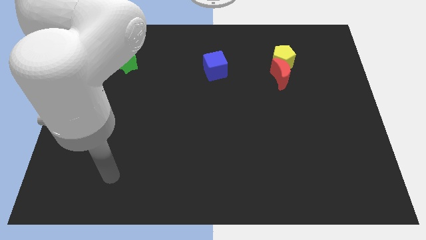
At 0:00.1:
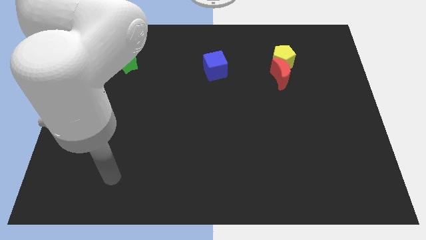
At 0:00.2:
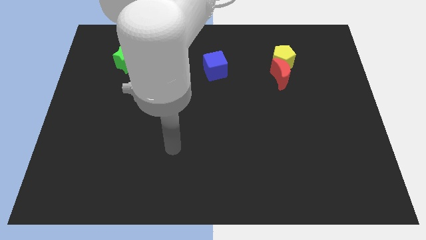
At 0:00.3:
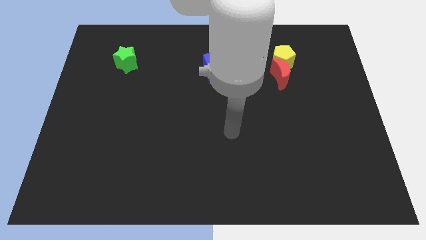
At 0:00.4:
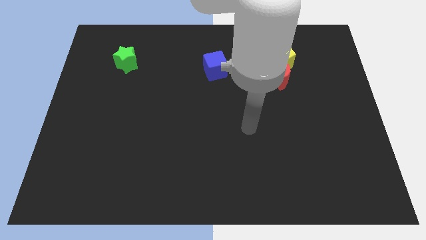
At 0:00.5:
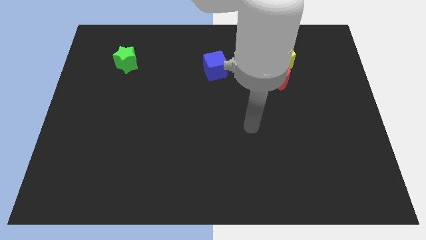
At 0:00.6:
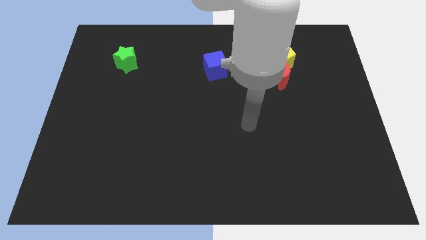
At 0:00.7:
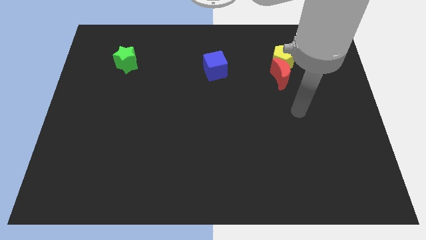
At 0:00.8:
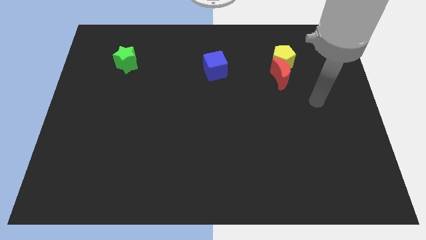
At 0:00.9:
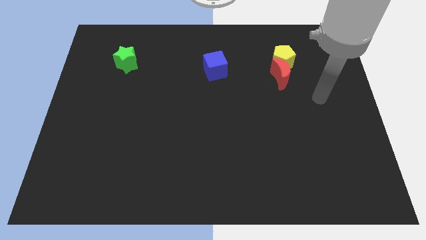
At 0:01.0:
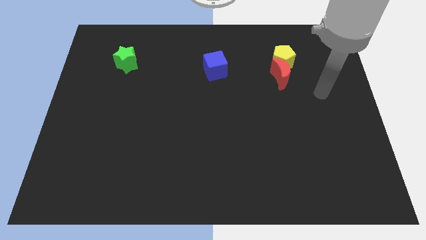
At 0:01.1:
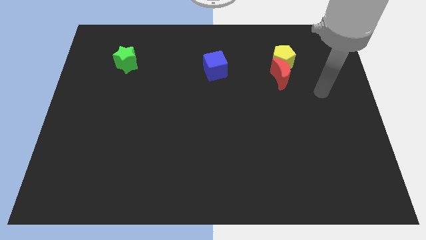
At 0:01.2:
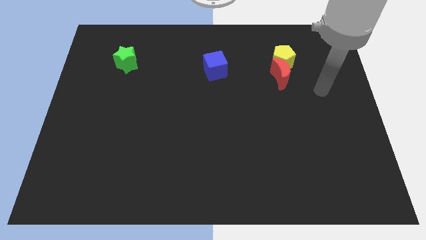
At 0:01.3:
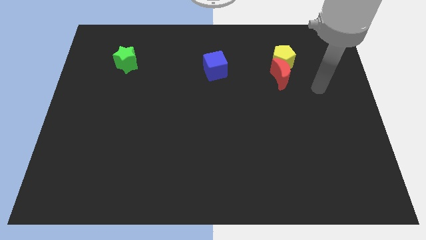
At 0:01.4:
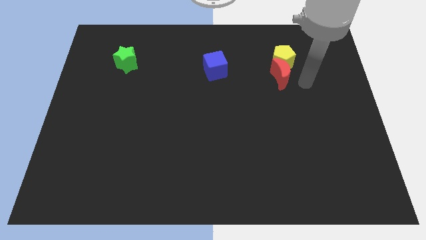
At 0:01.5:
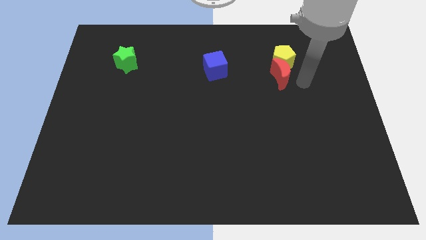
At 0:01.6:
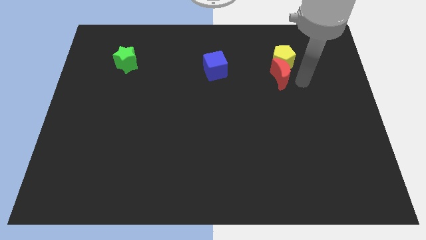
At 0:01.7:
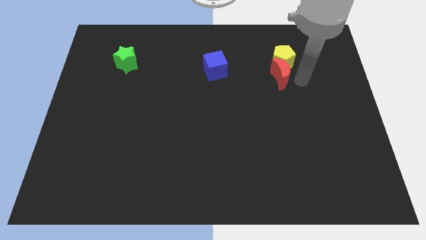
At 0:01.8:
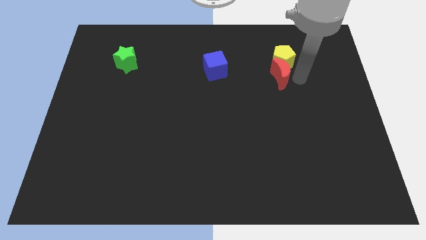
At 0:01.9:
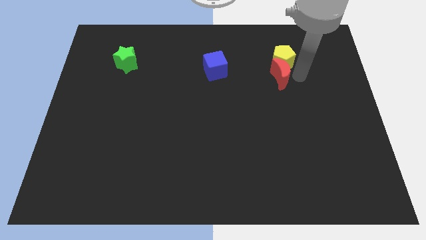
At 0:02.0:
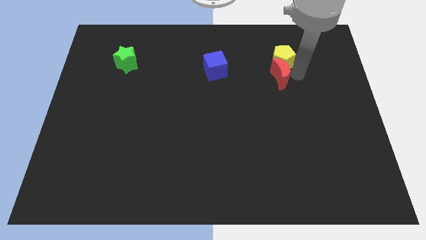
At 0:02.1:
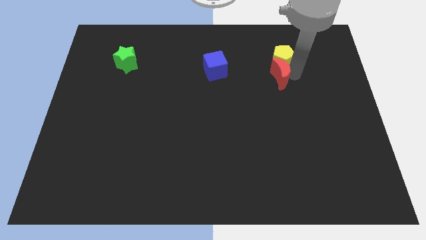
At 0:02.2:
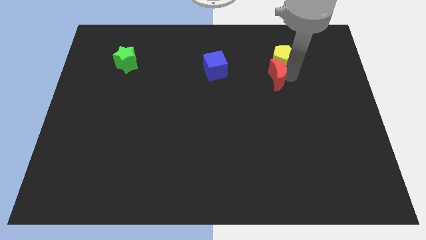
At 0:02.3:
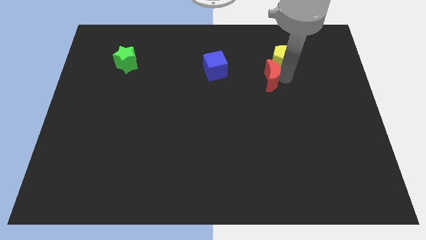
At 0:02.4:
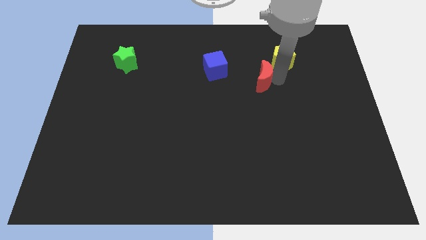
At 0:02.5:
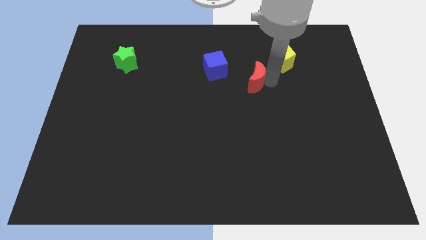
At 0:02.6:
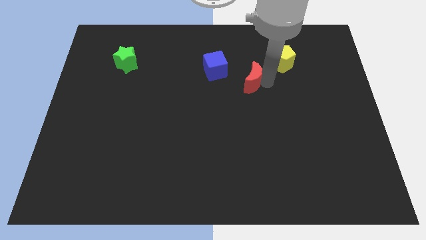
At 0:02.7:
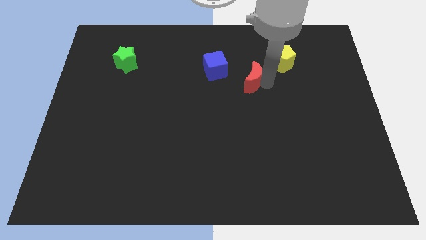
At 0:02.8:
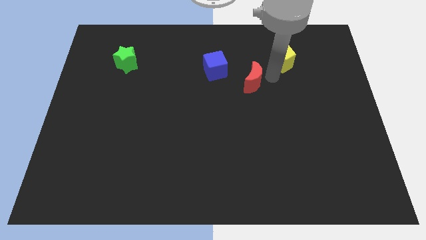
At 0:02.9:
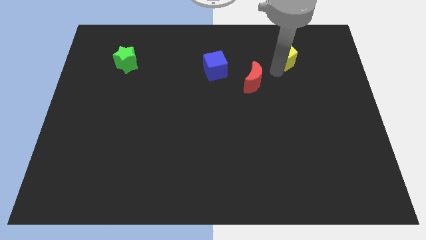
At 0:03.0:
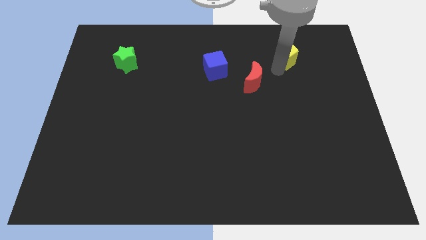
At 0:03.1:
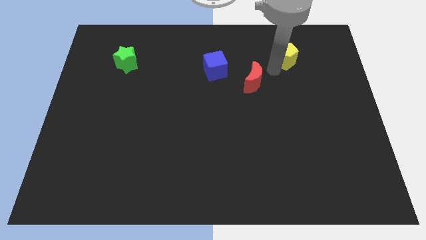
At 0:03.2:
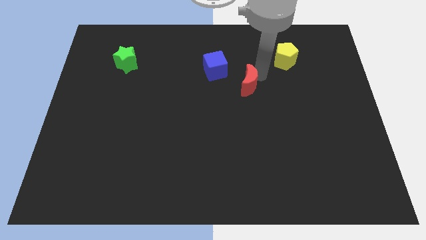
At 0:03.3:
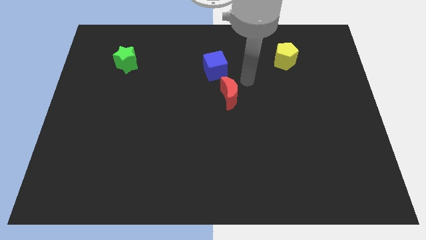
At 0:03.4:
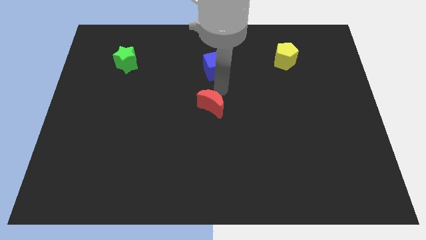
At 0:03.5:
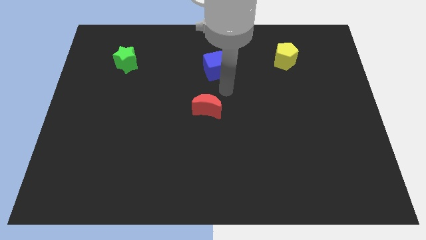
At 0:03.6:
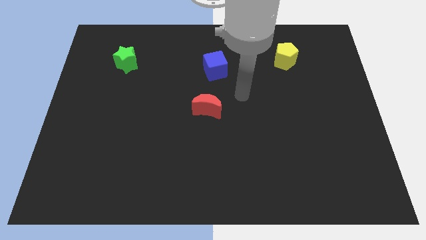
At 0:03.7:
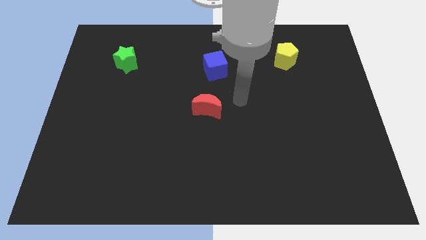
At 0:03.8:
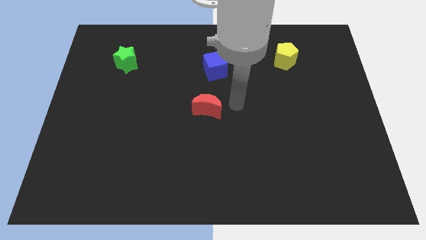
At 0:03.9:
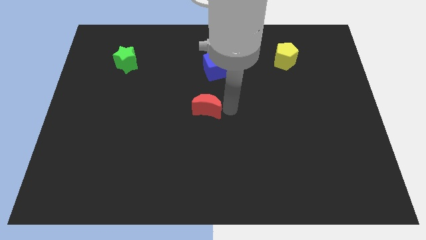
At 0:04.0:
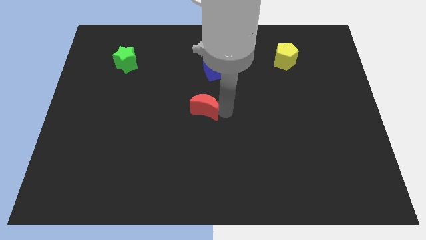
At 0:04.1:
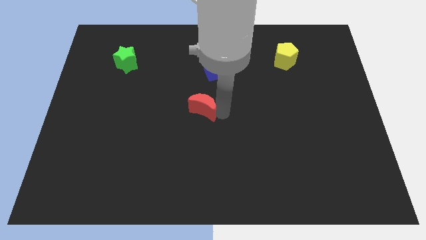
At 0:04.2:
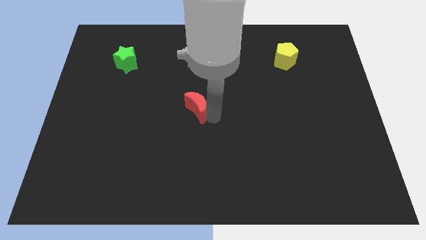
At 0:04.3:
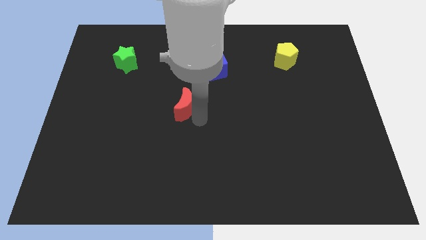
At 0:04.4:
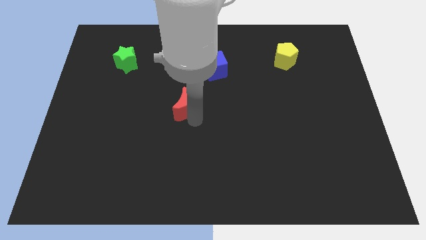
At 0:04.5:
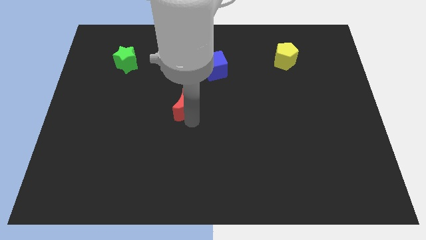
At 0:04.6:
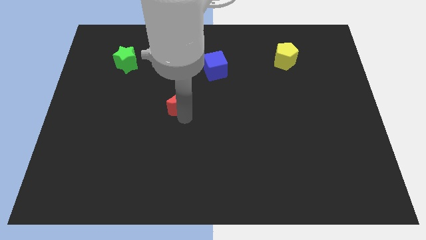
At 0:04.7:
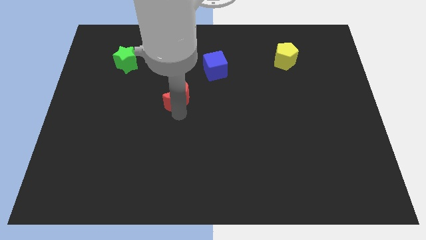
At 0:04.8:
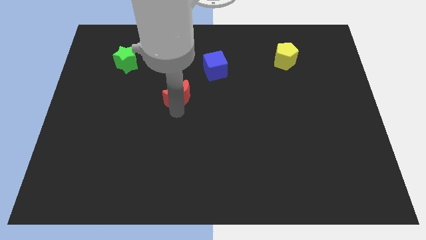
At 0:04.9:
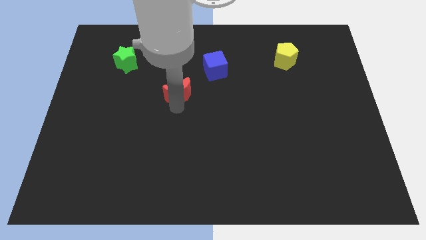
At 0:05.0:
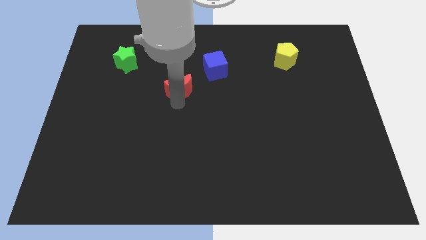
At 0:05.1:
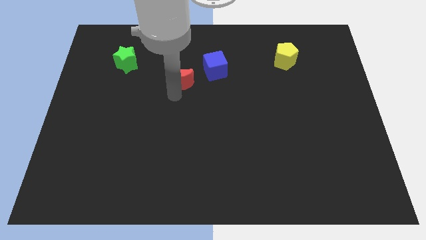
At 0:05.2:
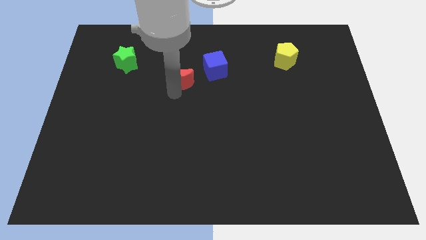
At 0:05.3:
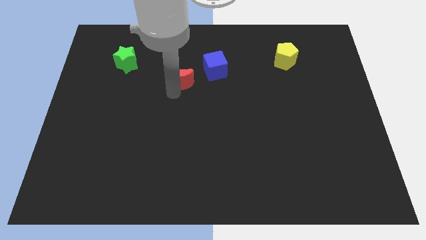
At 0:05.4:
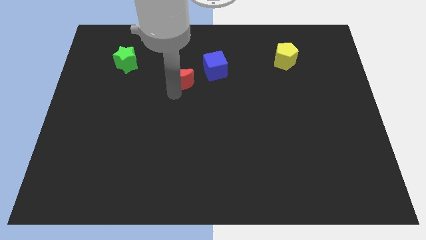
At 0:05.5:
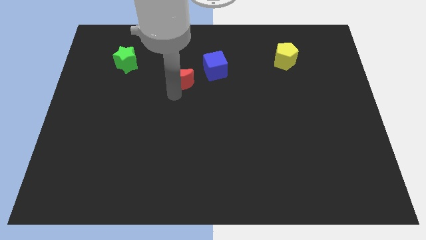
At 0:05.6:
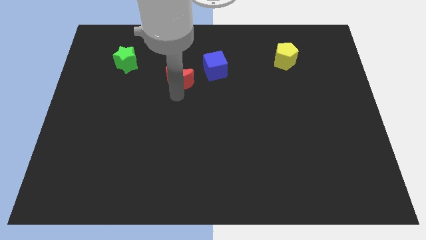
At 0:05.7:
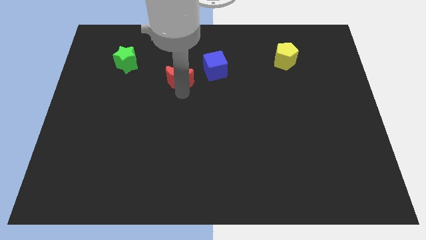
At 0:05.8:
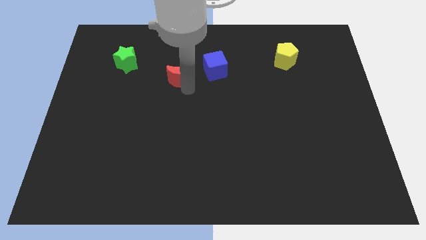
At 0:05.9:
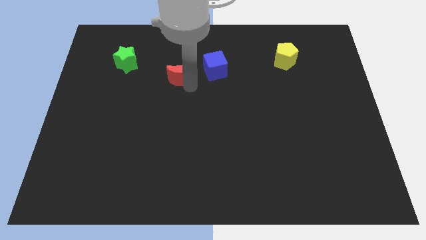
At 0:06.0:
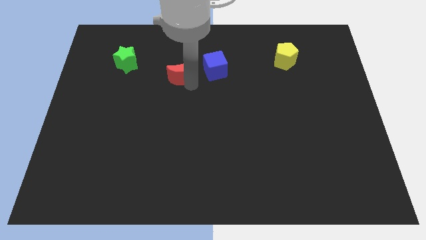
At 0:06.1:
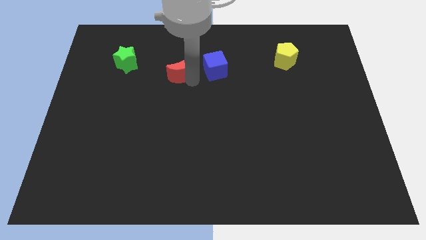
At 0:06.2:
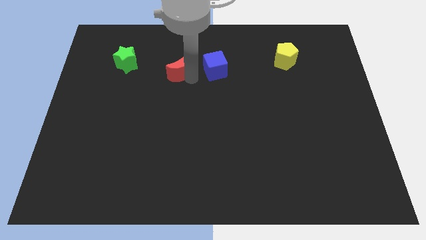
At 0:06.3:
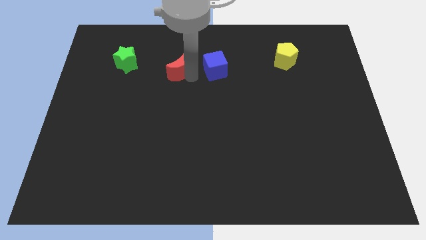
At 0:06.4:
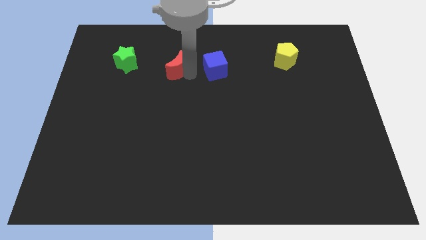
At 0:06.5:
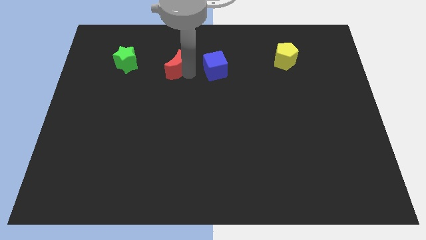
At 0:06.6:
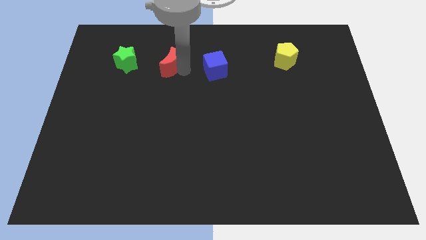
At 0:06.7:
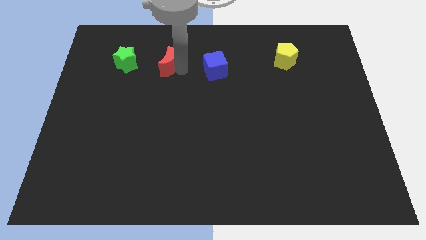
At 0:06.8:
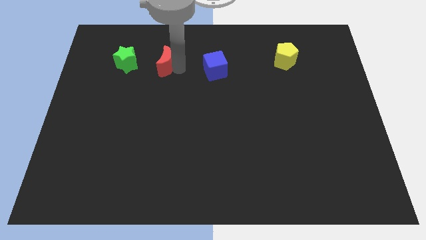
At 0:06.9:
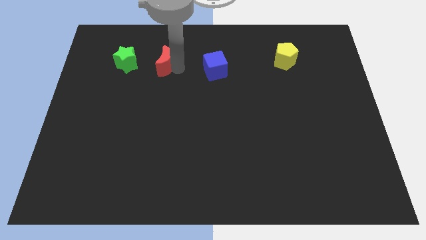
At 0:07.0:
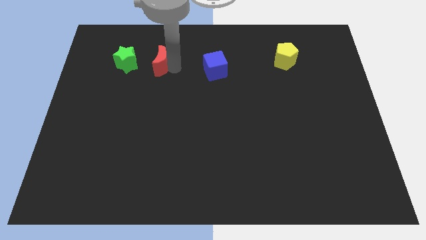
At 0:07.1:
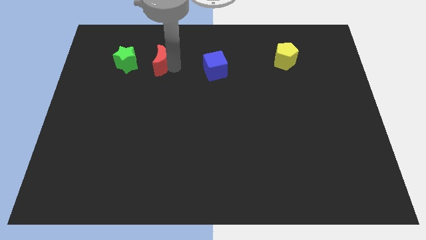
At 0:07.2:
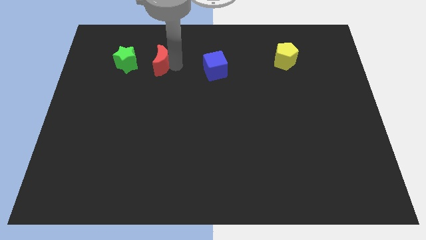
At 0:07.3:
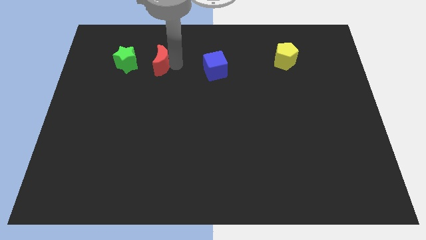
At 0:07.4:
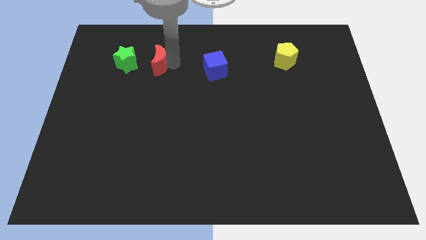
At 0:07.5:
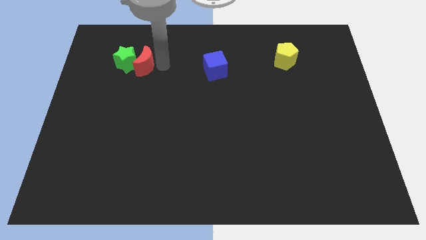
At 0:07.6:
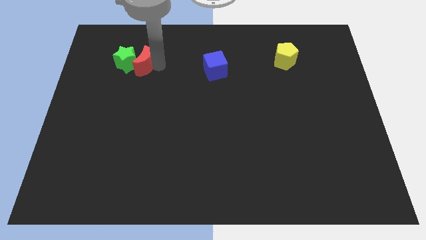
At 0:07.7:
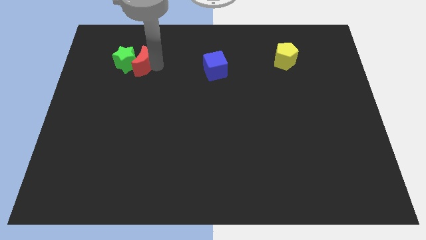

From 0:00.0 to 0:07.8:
push the red moon close to the green star

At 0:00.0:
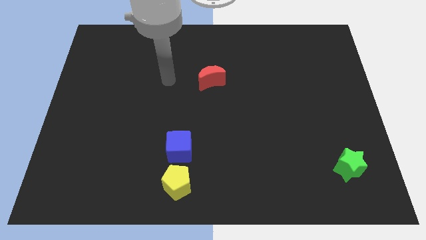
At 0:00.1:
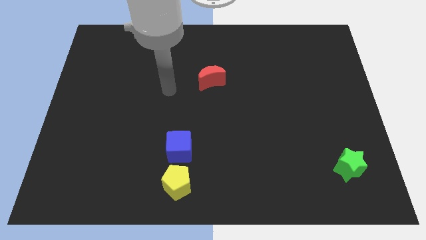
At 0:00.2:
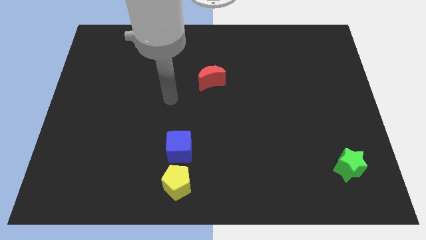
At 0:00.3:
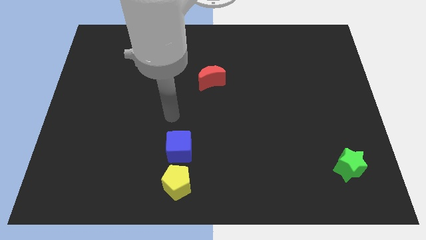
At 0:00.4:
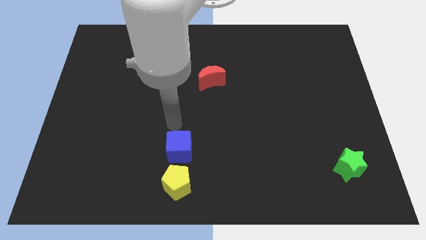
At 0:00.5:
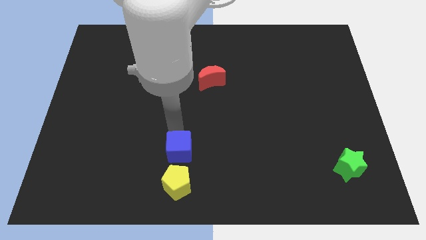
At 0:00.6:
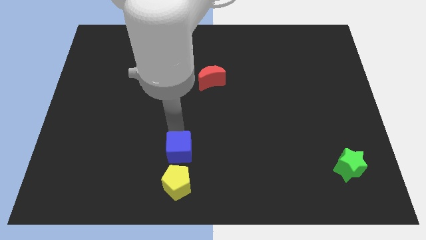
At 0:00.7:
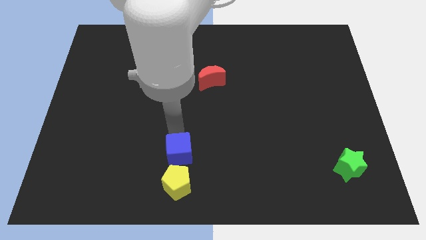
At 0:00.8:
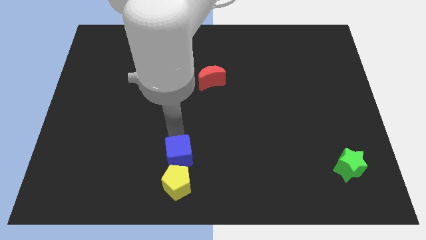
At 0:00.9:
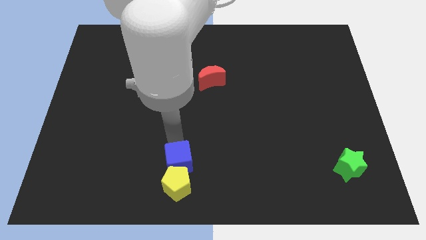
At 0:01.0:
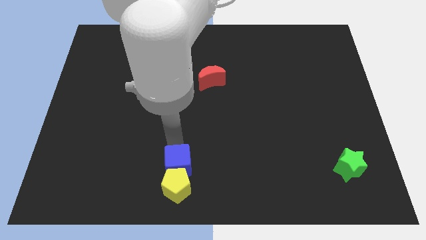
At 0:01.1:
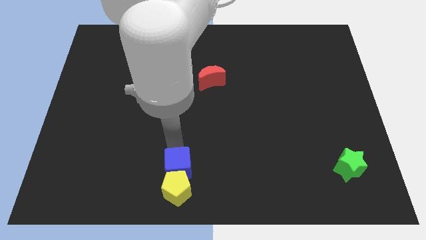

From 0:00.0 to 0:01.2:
put the blue block close to the pentagon
